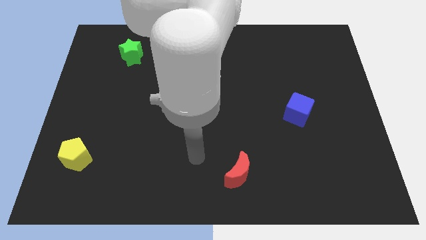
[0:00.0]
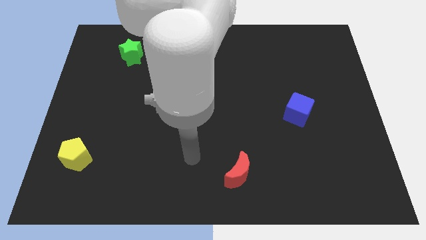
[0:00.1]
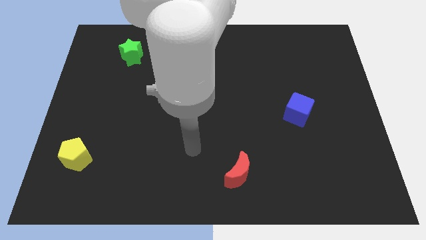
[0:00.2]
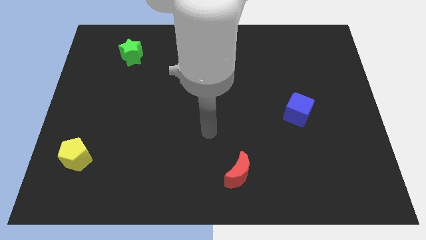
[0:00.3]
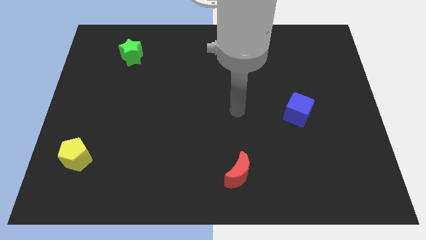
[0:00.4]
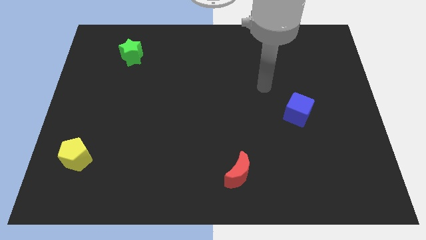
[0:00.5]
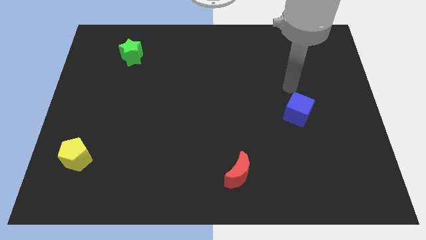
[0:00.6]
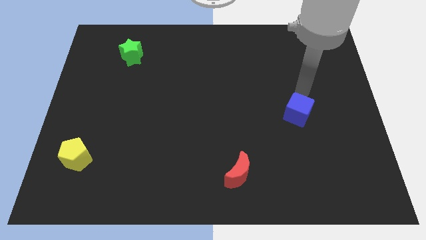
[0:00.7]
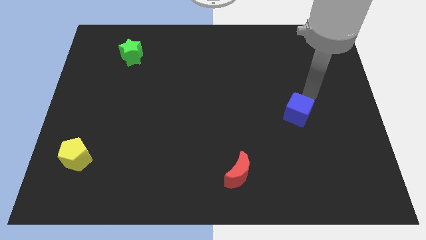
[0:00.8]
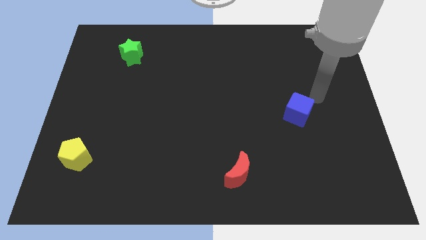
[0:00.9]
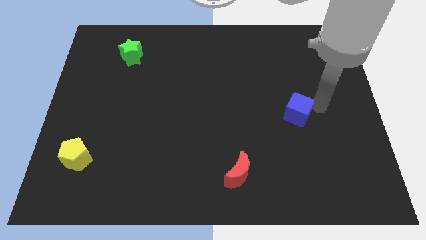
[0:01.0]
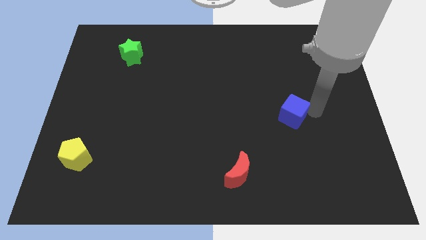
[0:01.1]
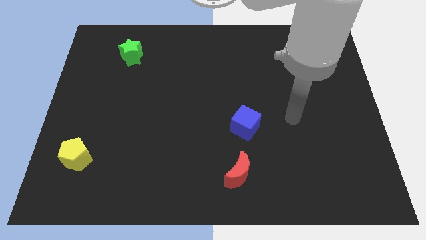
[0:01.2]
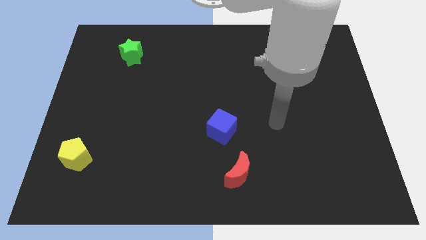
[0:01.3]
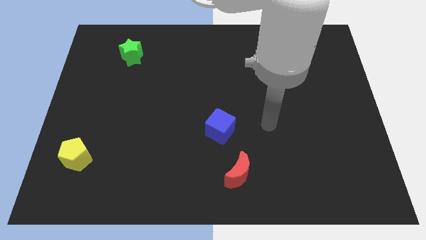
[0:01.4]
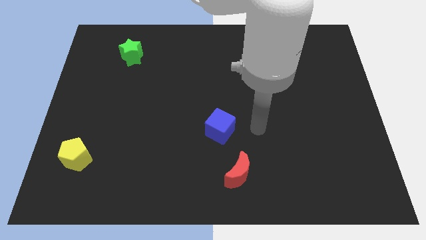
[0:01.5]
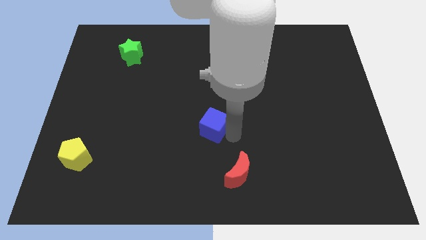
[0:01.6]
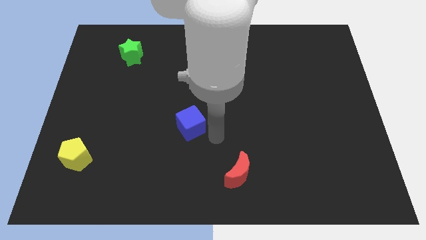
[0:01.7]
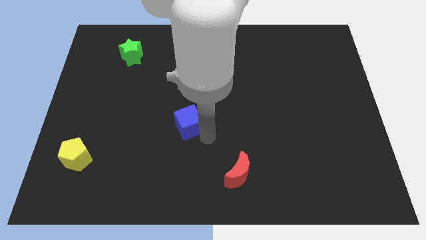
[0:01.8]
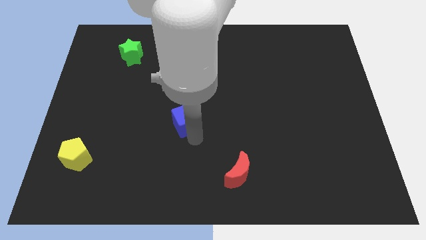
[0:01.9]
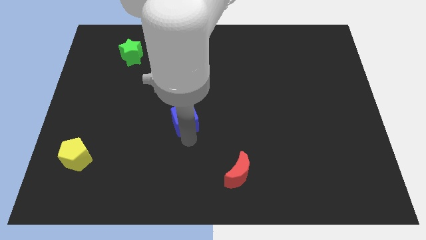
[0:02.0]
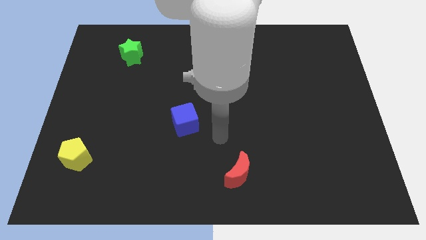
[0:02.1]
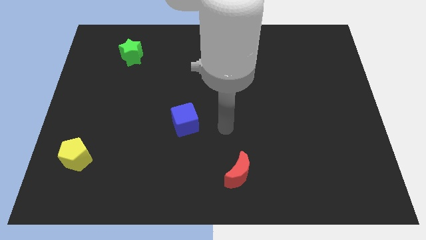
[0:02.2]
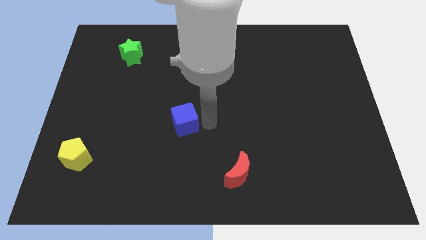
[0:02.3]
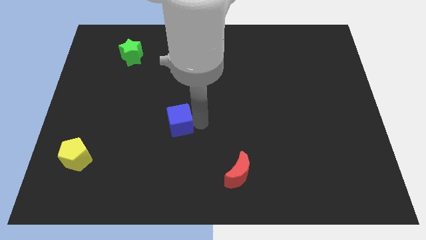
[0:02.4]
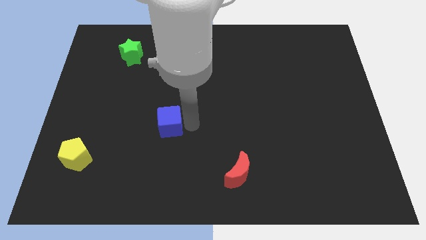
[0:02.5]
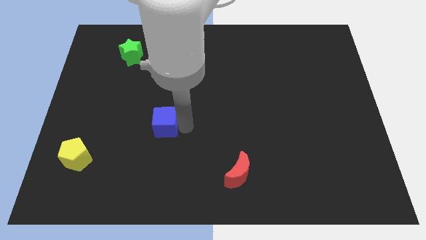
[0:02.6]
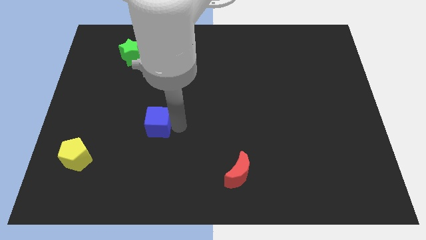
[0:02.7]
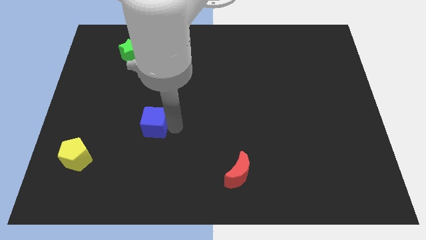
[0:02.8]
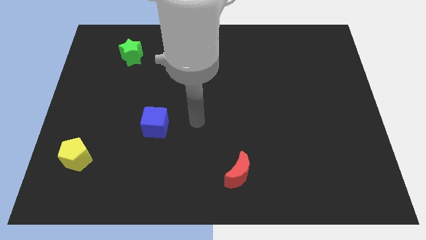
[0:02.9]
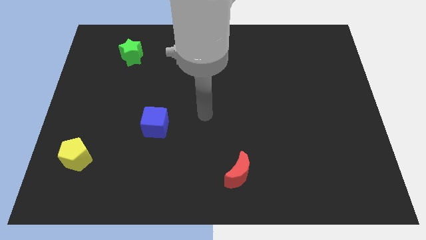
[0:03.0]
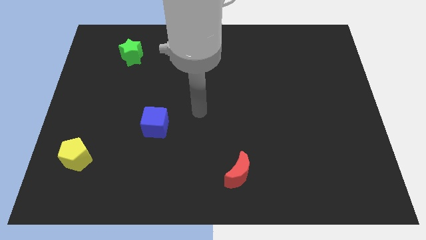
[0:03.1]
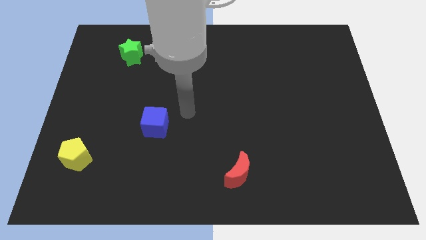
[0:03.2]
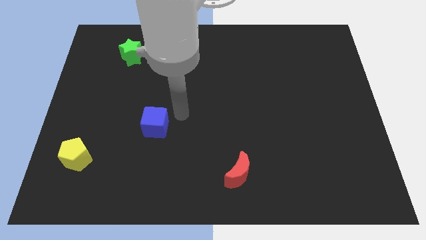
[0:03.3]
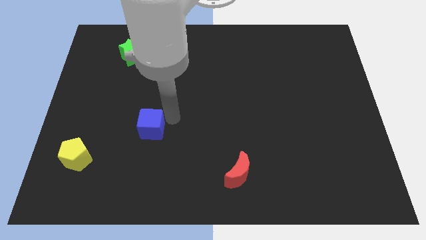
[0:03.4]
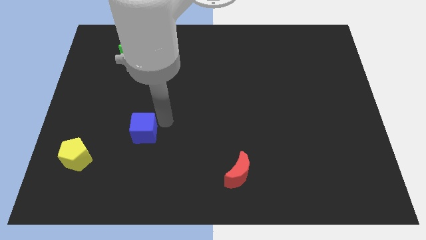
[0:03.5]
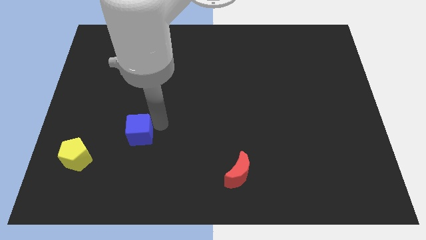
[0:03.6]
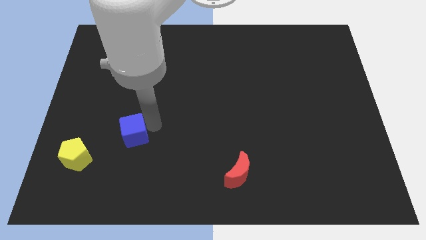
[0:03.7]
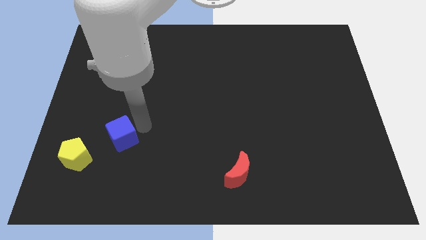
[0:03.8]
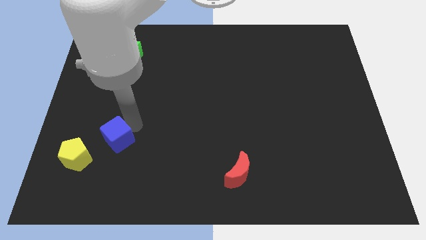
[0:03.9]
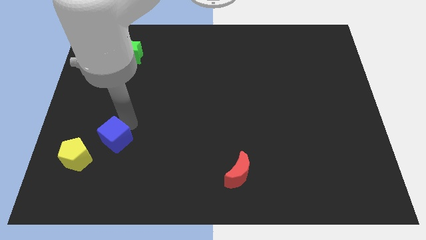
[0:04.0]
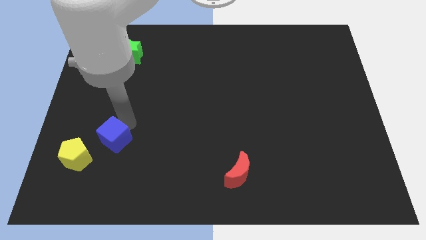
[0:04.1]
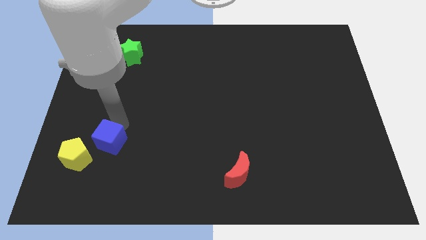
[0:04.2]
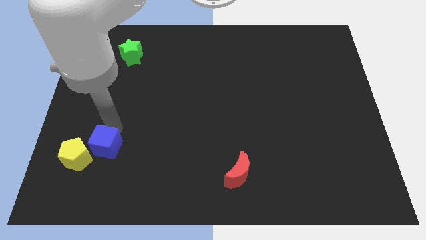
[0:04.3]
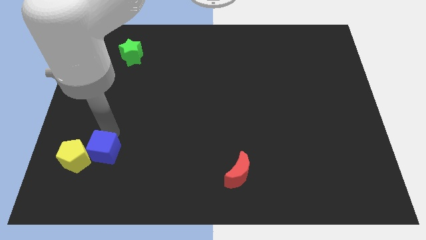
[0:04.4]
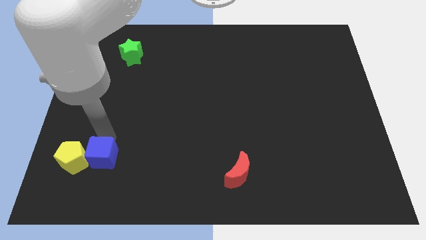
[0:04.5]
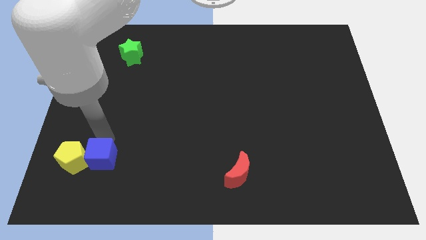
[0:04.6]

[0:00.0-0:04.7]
move the blue cube next to the yellow pentagon

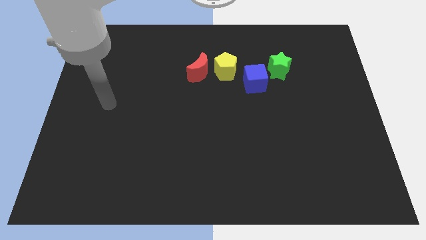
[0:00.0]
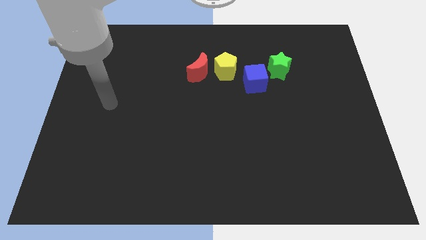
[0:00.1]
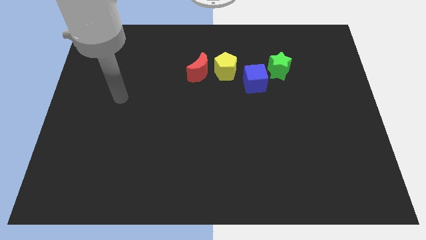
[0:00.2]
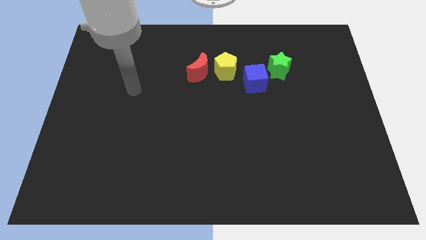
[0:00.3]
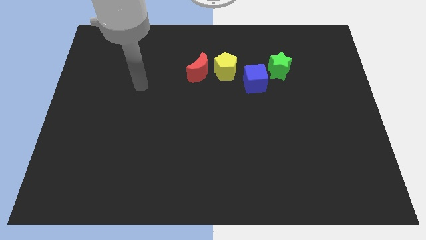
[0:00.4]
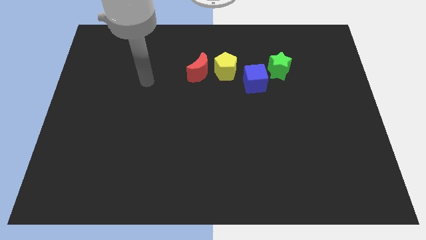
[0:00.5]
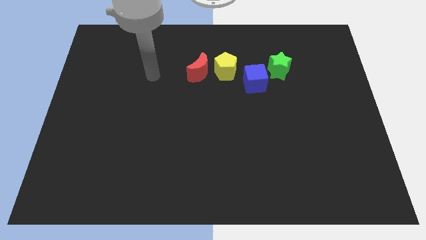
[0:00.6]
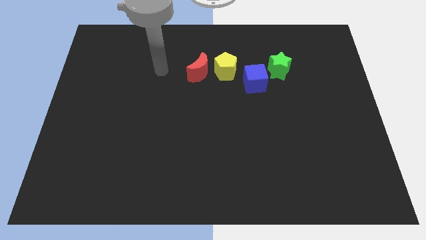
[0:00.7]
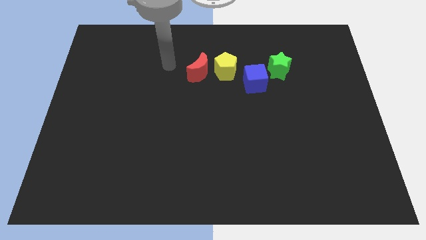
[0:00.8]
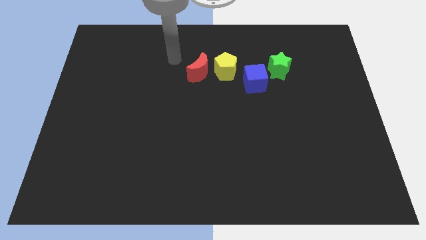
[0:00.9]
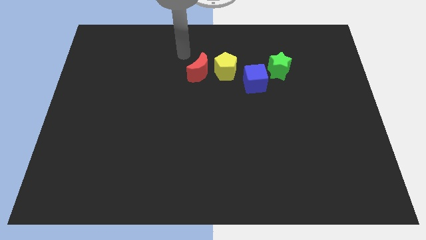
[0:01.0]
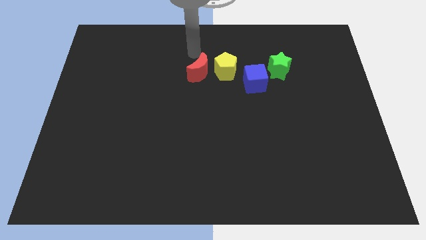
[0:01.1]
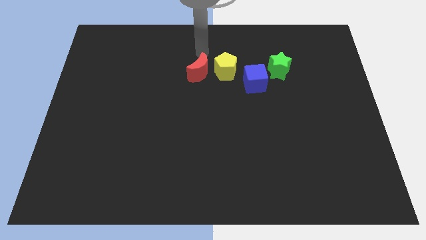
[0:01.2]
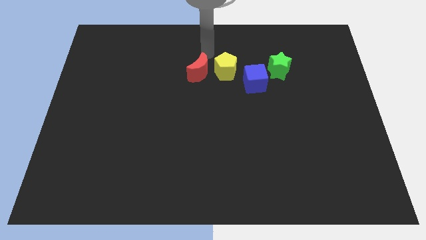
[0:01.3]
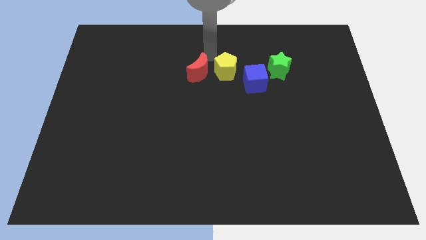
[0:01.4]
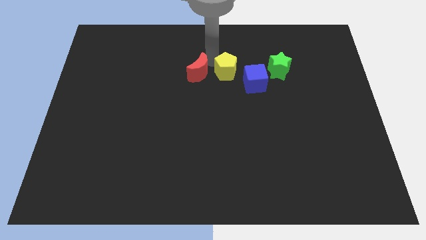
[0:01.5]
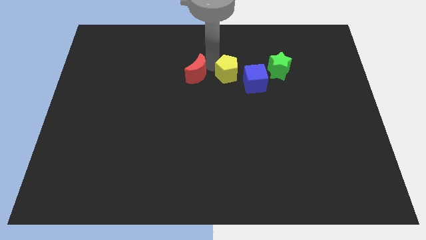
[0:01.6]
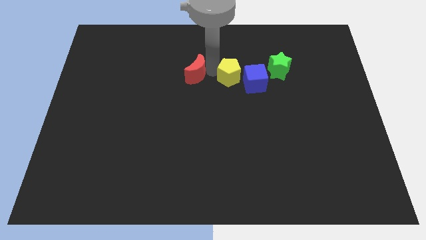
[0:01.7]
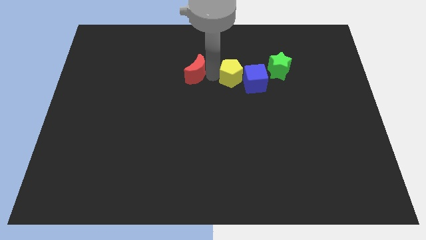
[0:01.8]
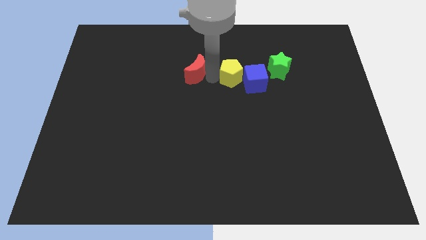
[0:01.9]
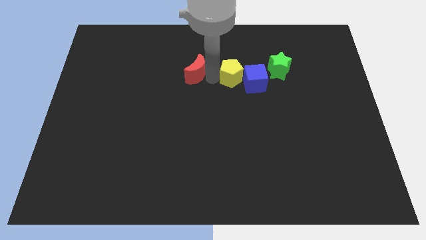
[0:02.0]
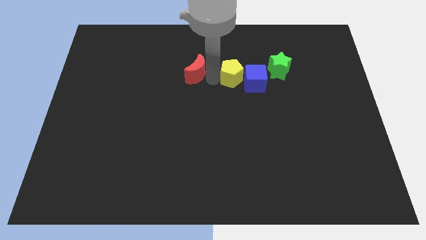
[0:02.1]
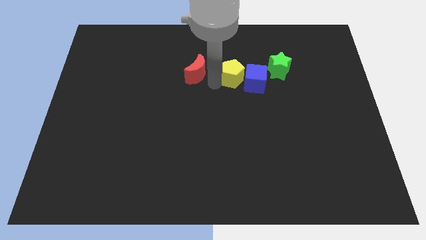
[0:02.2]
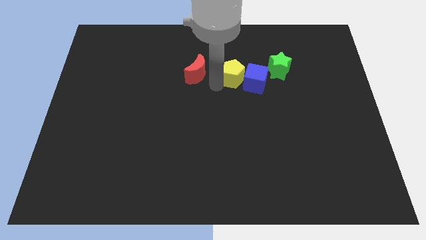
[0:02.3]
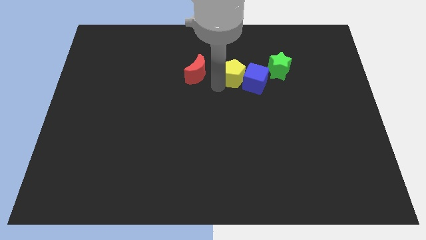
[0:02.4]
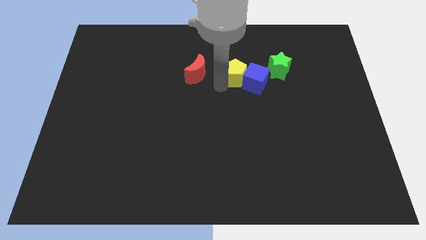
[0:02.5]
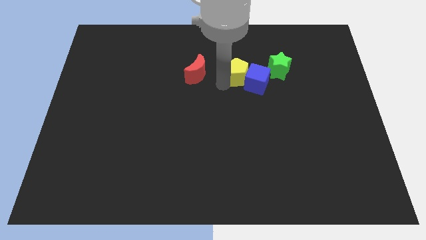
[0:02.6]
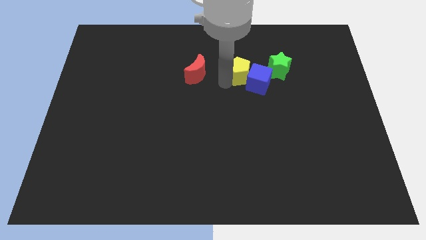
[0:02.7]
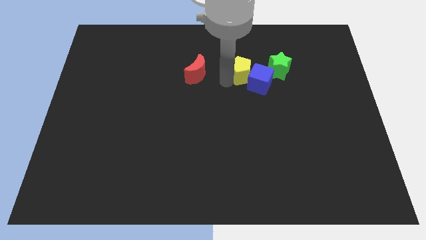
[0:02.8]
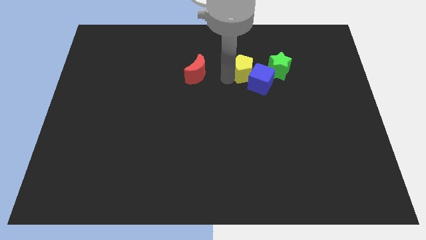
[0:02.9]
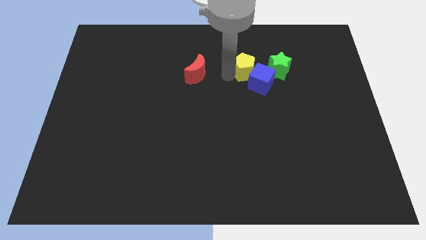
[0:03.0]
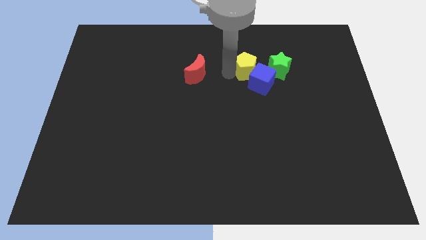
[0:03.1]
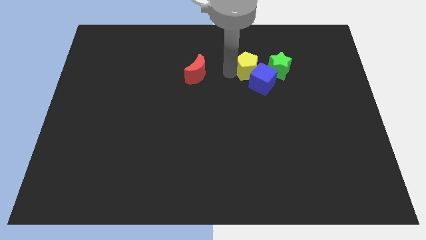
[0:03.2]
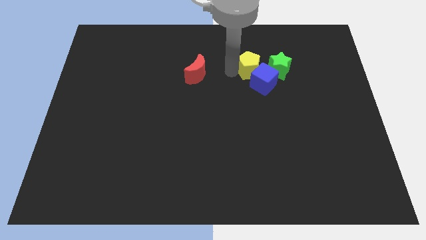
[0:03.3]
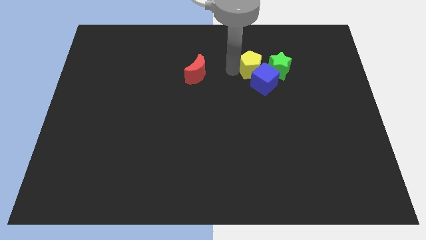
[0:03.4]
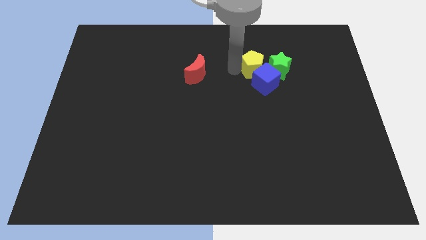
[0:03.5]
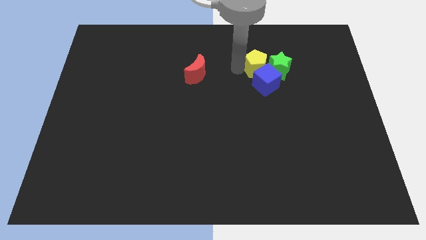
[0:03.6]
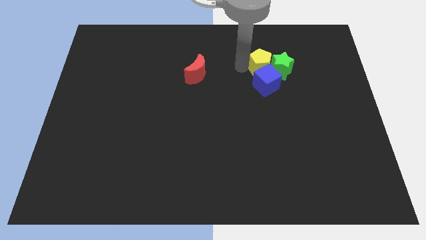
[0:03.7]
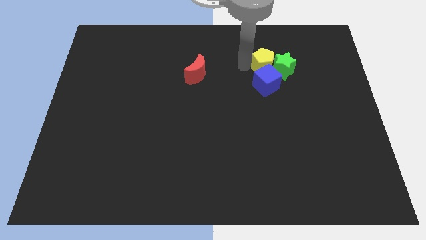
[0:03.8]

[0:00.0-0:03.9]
slide the yellow block to the star

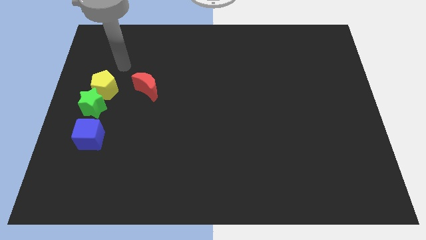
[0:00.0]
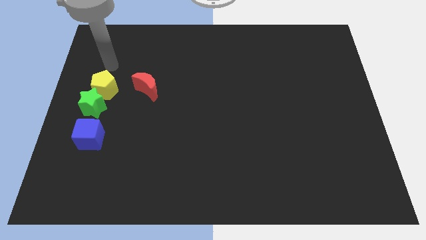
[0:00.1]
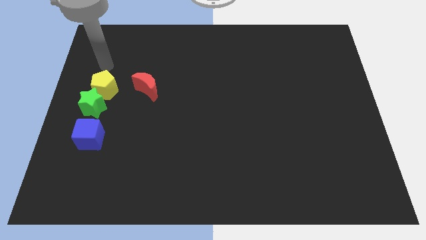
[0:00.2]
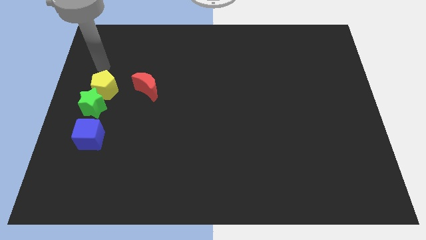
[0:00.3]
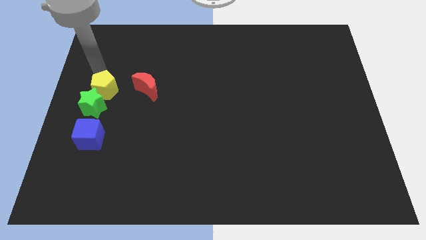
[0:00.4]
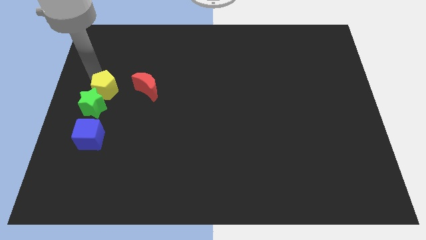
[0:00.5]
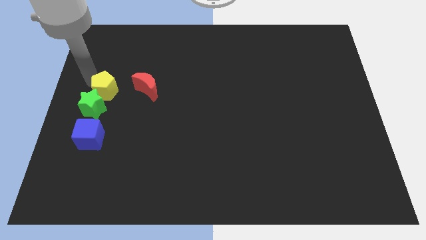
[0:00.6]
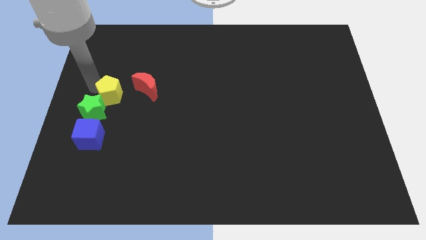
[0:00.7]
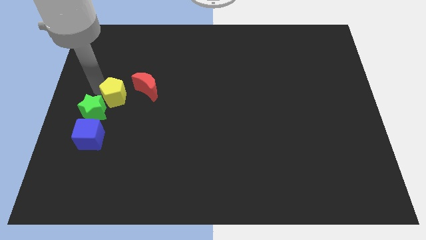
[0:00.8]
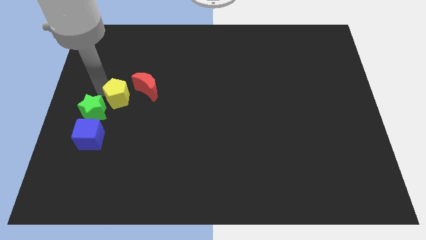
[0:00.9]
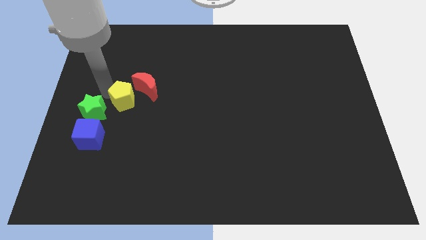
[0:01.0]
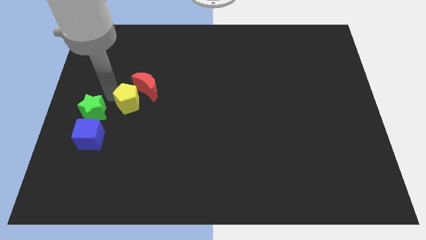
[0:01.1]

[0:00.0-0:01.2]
put the yellow pentagon towards the moon
